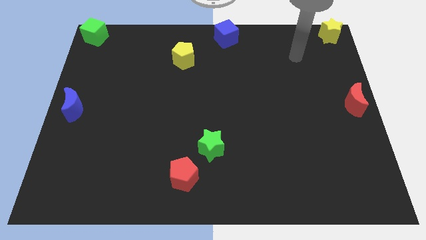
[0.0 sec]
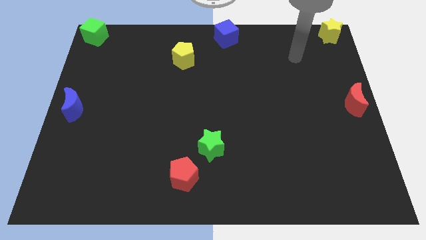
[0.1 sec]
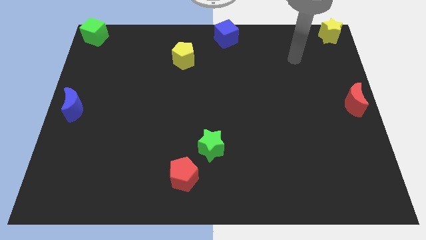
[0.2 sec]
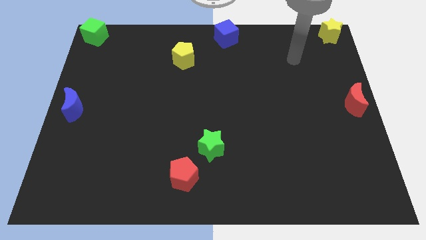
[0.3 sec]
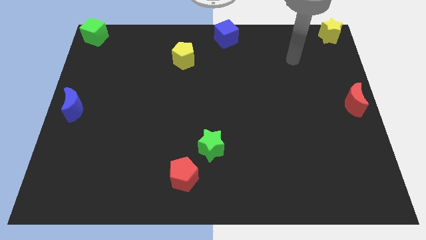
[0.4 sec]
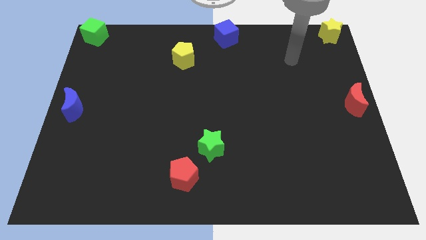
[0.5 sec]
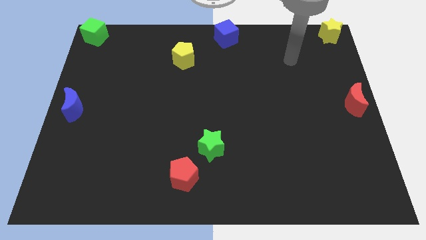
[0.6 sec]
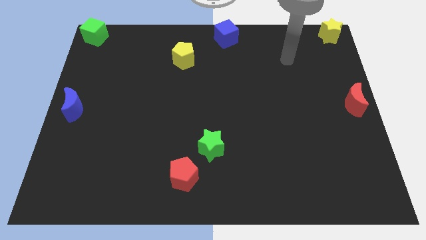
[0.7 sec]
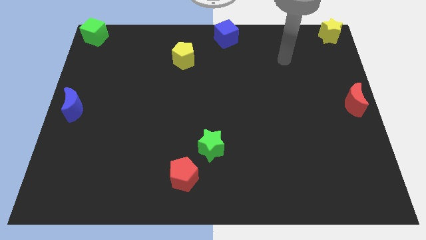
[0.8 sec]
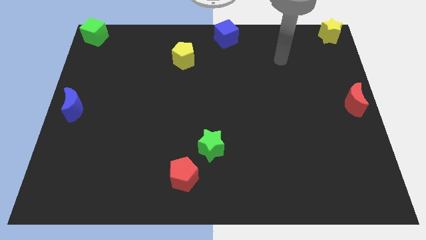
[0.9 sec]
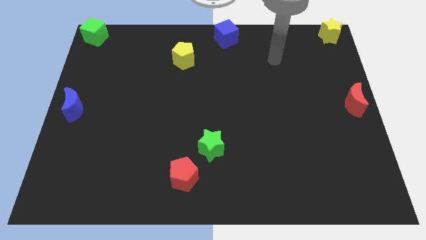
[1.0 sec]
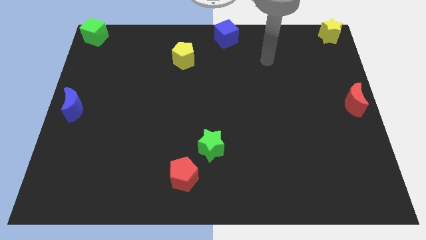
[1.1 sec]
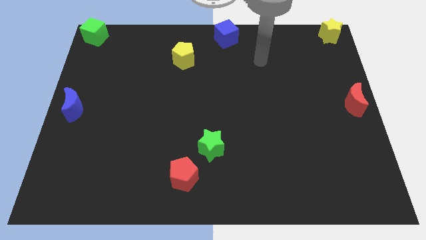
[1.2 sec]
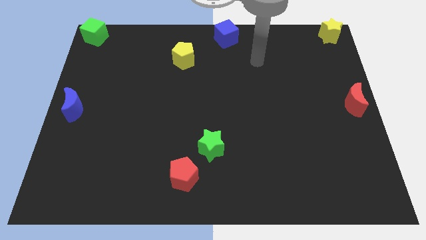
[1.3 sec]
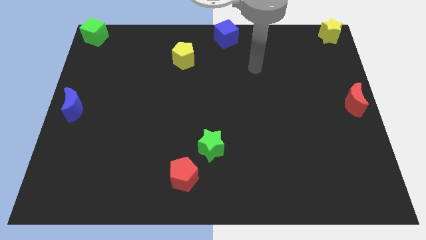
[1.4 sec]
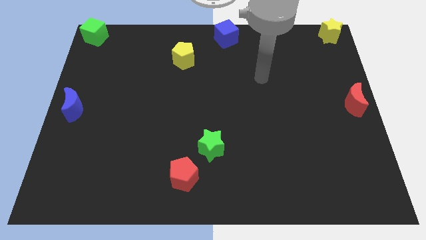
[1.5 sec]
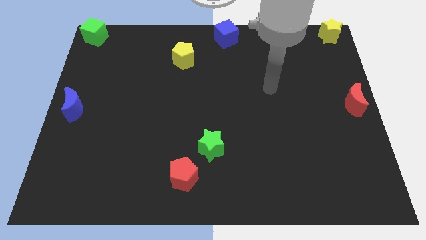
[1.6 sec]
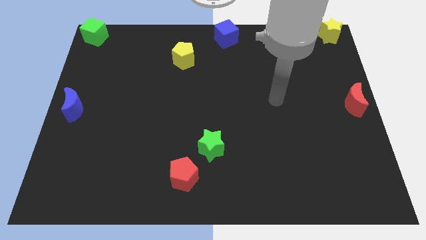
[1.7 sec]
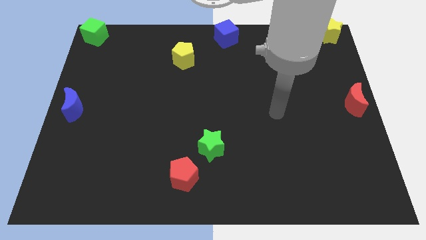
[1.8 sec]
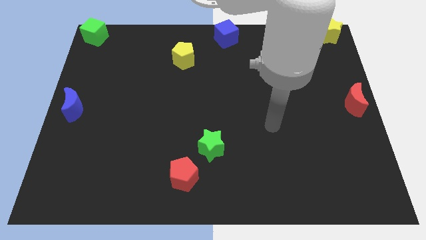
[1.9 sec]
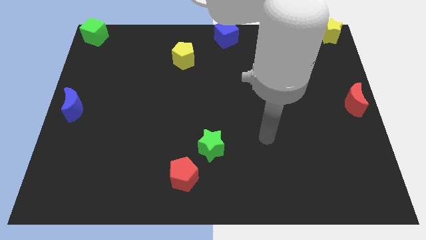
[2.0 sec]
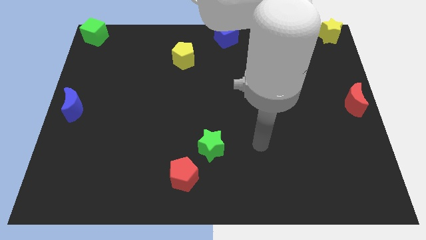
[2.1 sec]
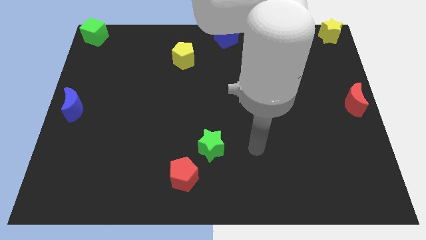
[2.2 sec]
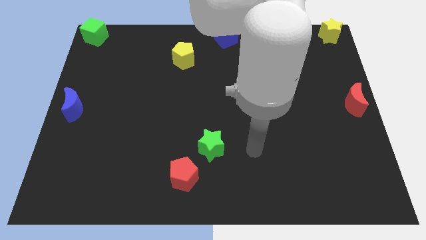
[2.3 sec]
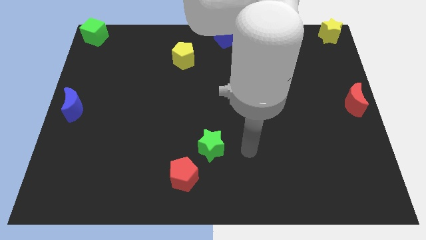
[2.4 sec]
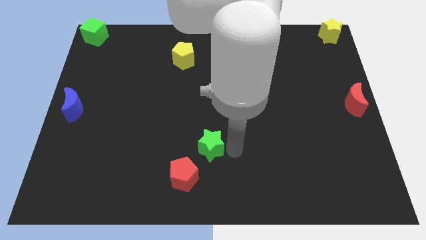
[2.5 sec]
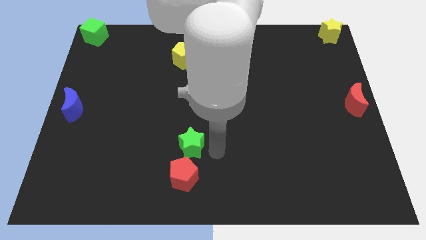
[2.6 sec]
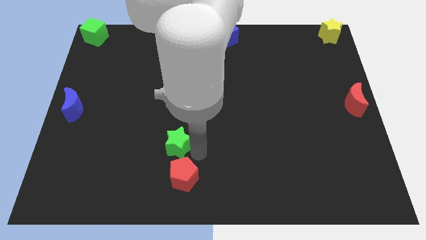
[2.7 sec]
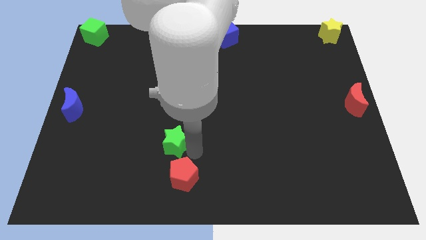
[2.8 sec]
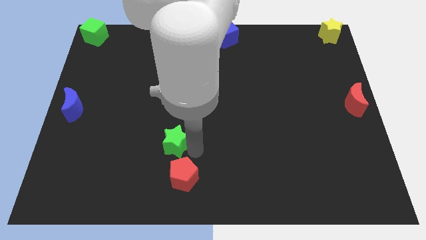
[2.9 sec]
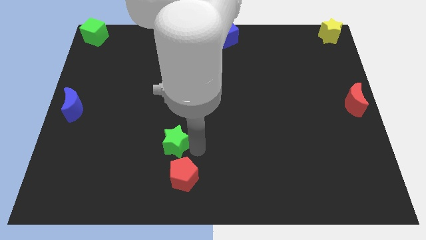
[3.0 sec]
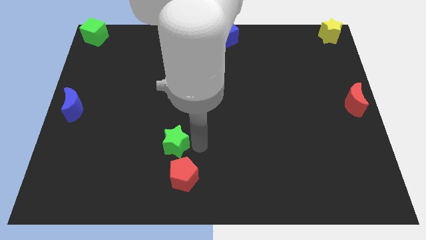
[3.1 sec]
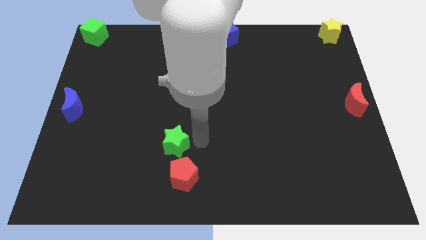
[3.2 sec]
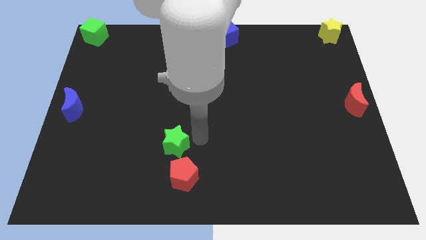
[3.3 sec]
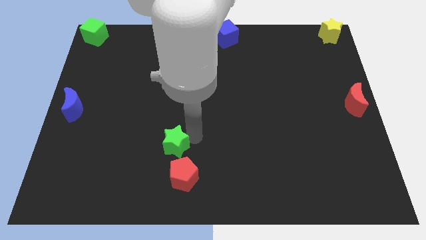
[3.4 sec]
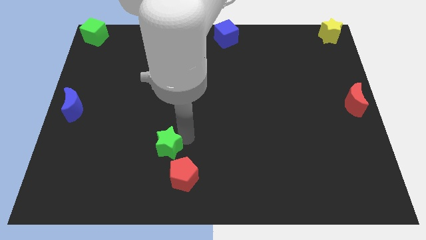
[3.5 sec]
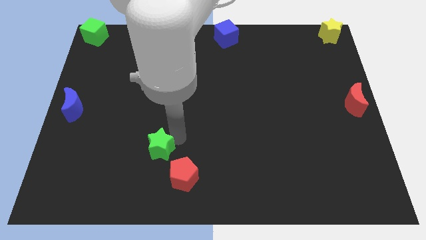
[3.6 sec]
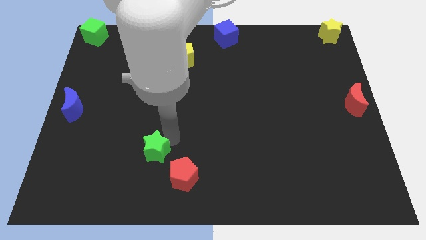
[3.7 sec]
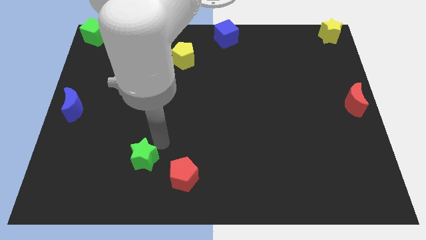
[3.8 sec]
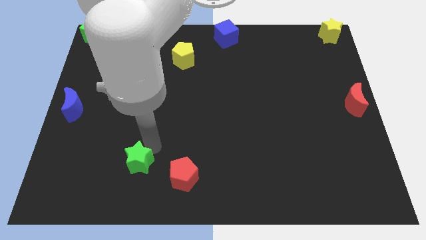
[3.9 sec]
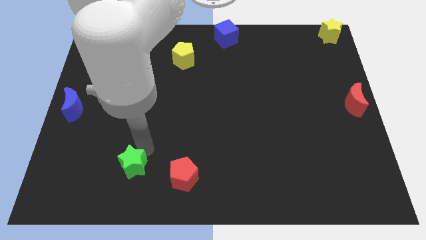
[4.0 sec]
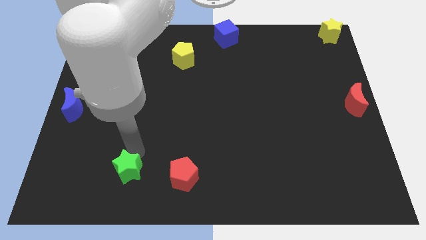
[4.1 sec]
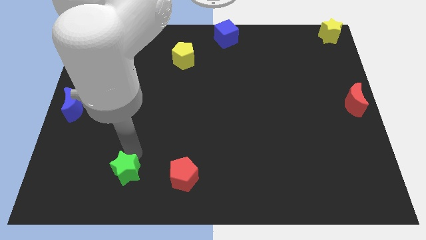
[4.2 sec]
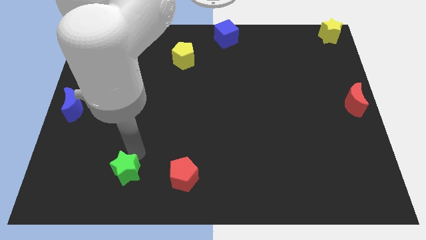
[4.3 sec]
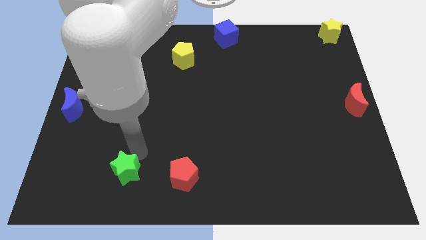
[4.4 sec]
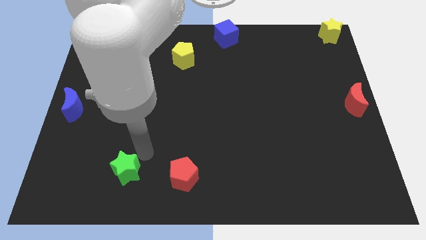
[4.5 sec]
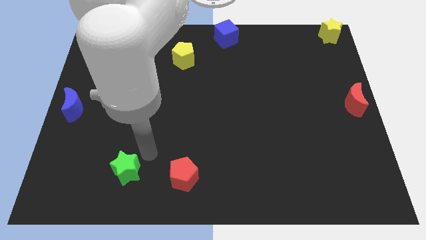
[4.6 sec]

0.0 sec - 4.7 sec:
place the green star left to the red pentagon

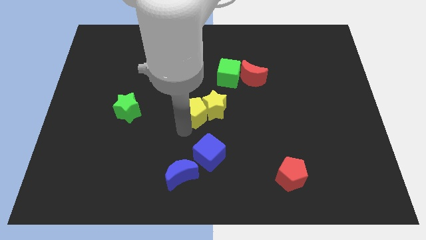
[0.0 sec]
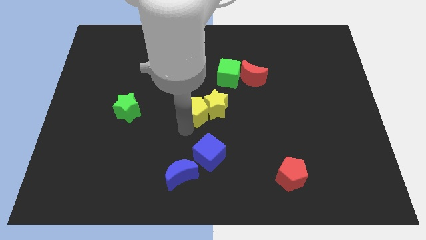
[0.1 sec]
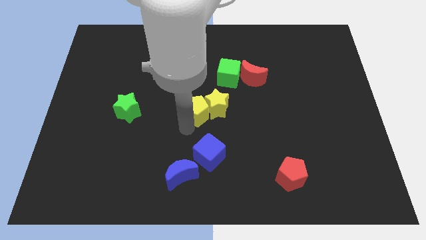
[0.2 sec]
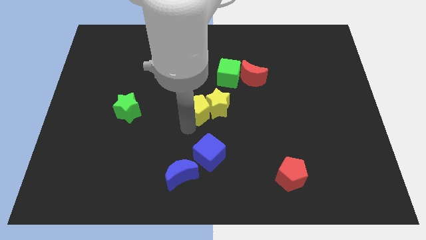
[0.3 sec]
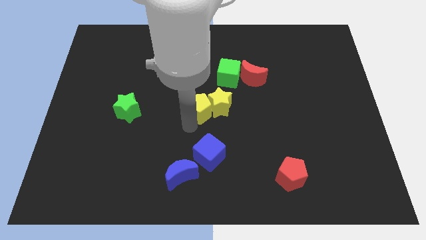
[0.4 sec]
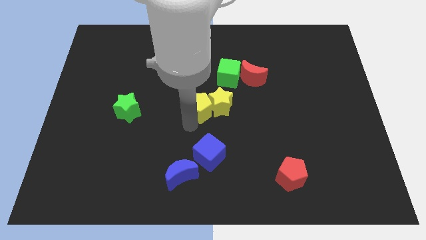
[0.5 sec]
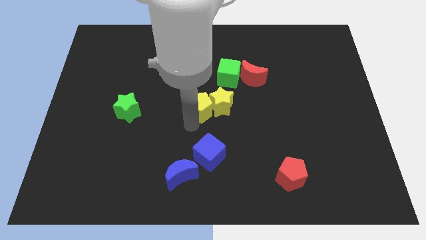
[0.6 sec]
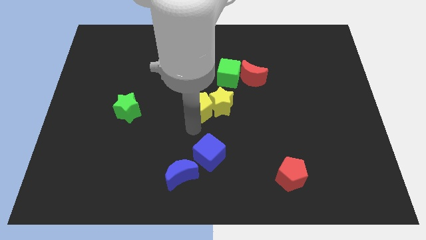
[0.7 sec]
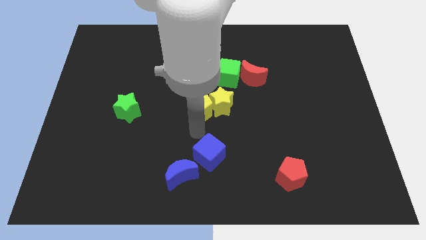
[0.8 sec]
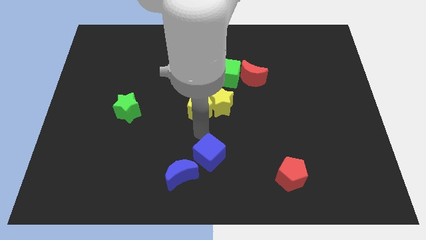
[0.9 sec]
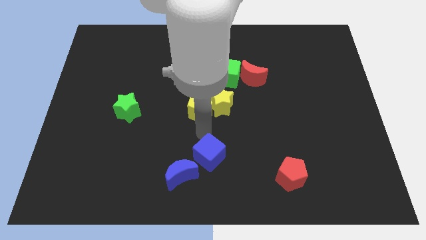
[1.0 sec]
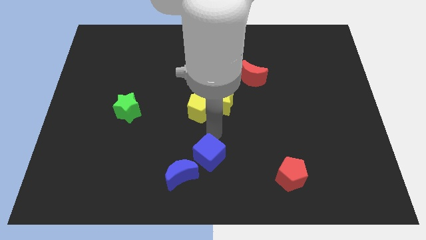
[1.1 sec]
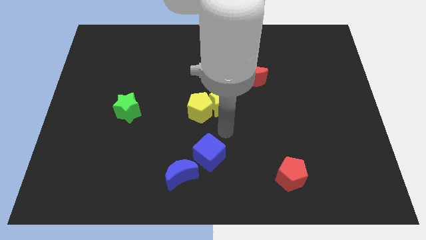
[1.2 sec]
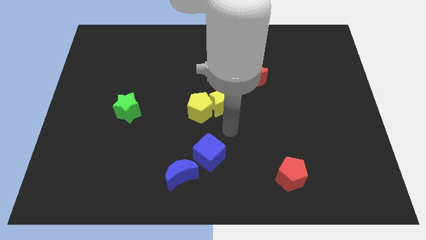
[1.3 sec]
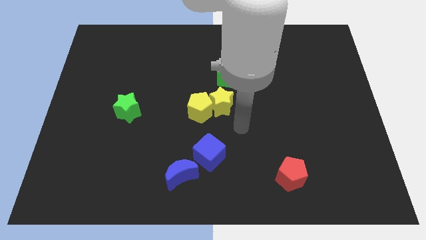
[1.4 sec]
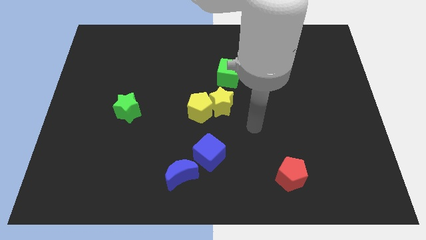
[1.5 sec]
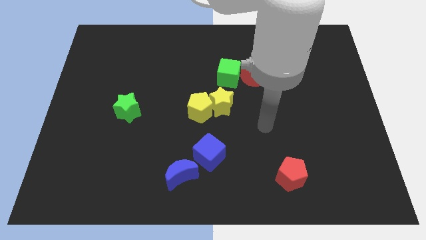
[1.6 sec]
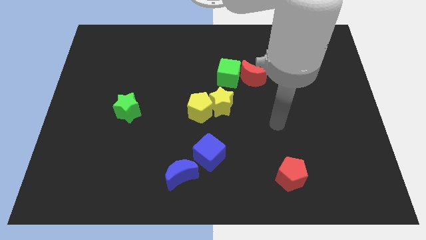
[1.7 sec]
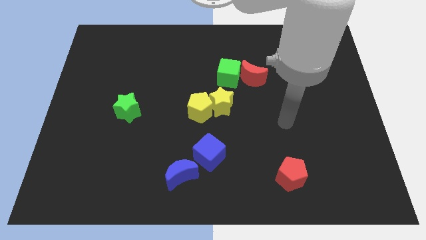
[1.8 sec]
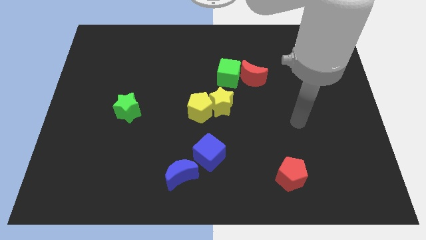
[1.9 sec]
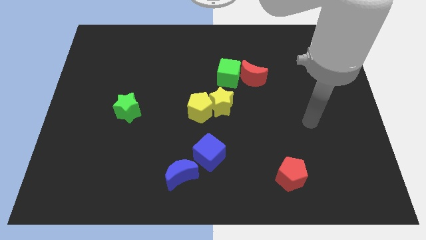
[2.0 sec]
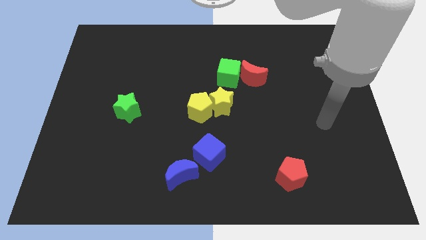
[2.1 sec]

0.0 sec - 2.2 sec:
move the pointer away from the yellow blocks

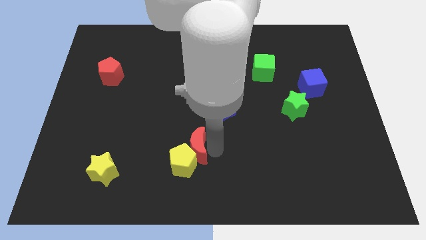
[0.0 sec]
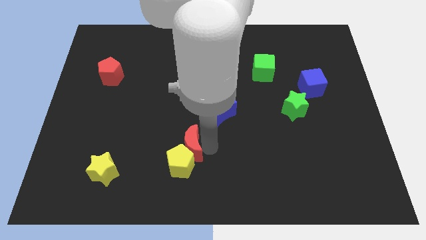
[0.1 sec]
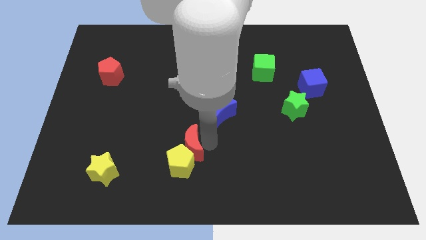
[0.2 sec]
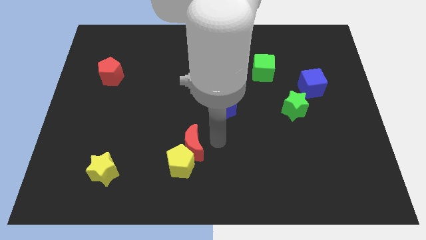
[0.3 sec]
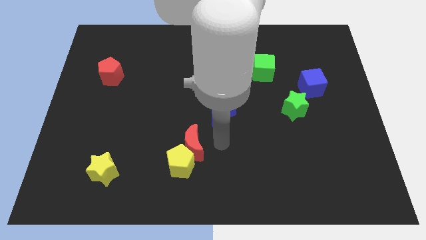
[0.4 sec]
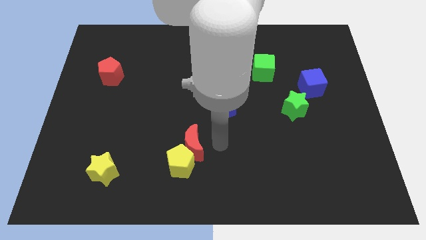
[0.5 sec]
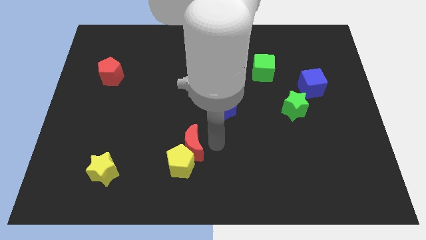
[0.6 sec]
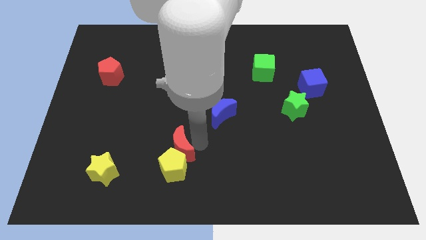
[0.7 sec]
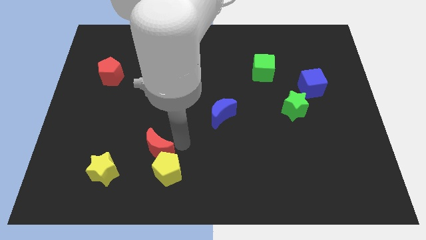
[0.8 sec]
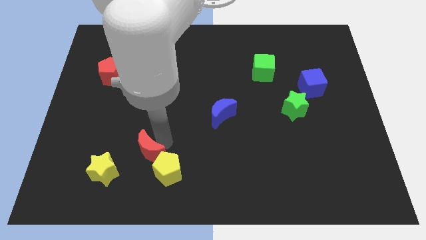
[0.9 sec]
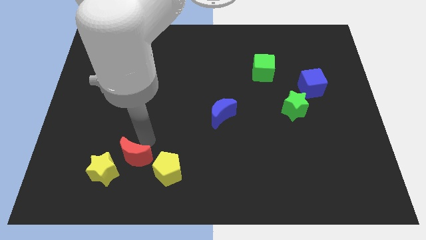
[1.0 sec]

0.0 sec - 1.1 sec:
separate red moon from yellow pentagon

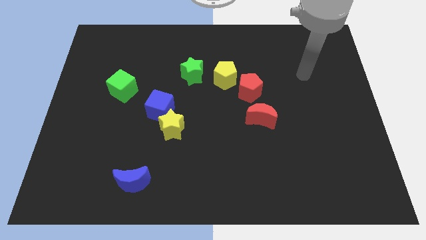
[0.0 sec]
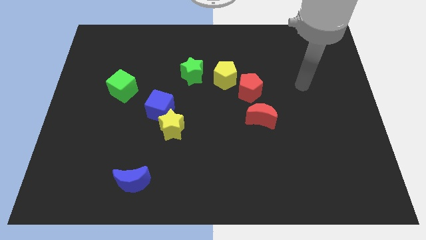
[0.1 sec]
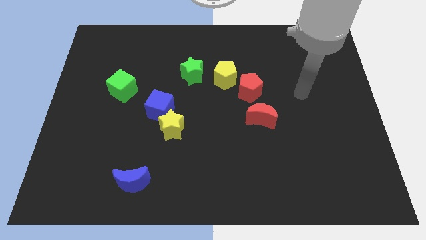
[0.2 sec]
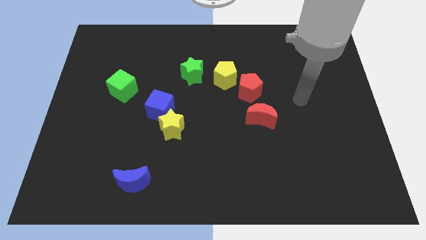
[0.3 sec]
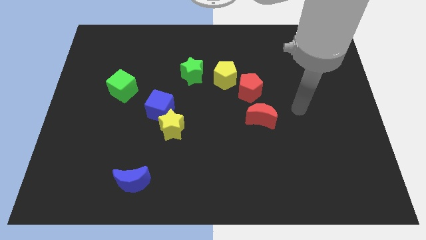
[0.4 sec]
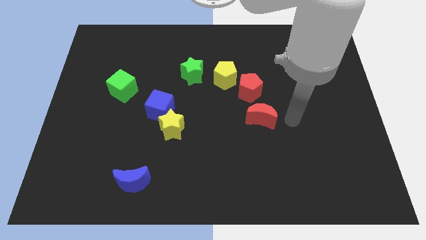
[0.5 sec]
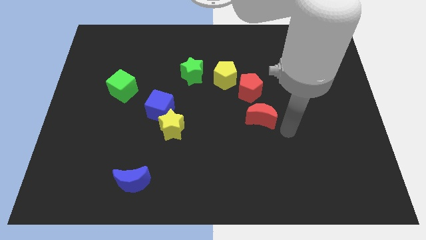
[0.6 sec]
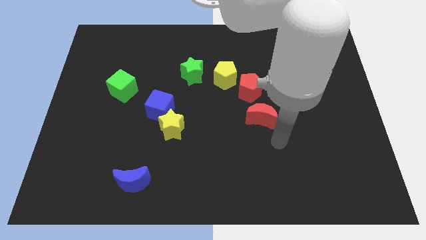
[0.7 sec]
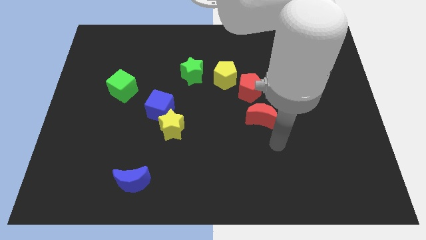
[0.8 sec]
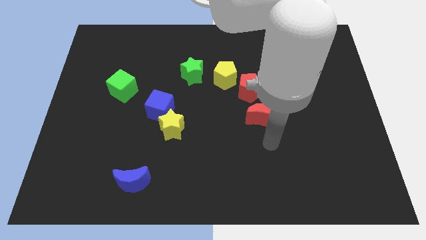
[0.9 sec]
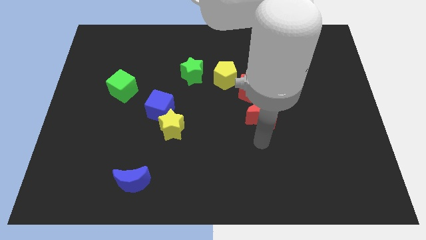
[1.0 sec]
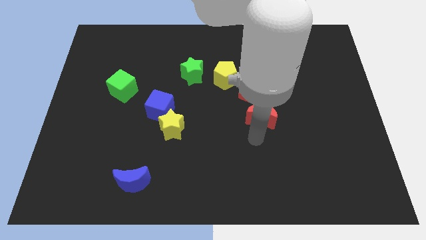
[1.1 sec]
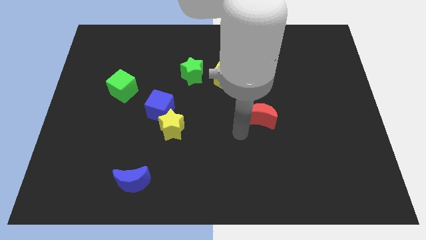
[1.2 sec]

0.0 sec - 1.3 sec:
point your arm at the bottom of red moon
